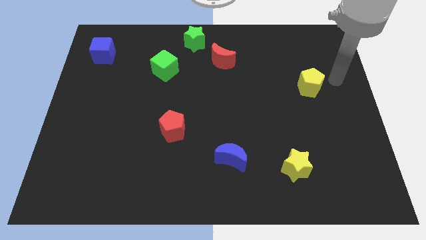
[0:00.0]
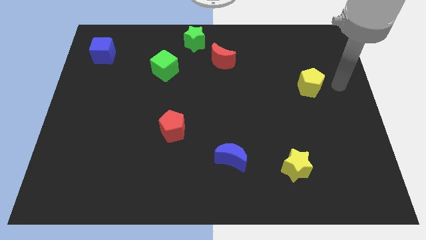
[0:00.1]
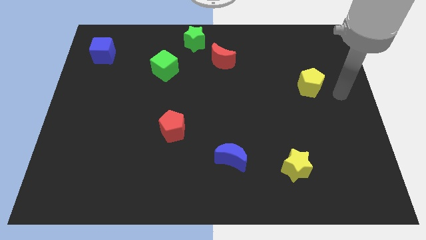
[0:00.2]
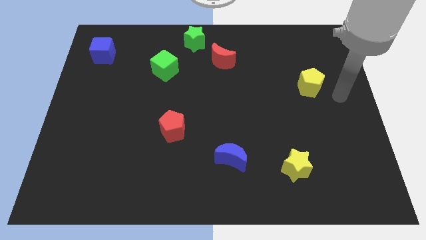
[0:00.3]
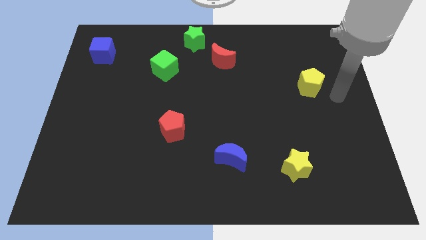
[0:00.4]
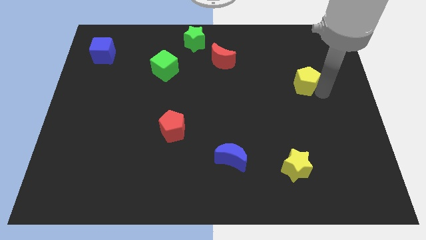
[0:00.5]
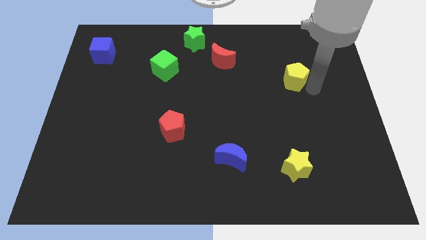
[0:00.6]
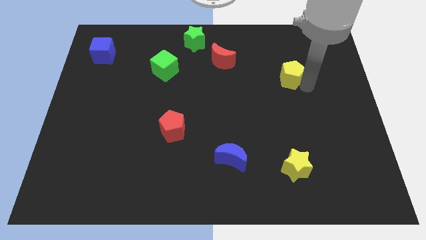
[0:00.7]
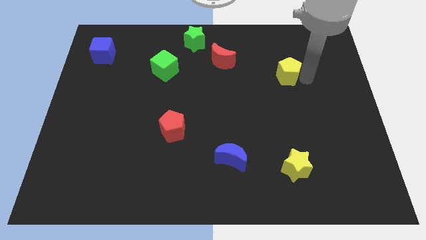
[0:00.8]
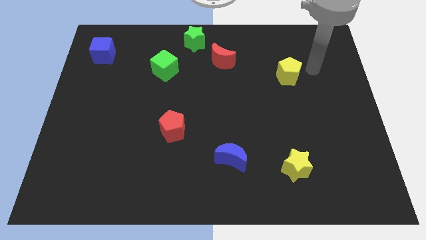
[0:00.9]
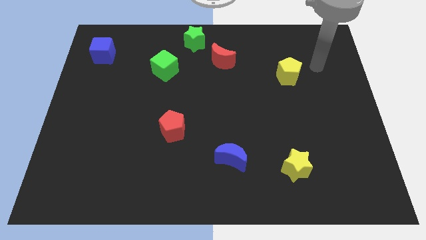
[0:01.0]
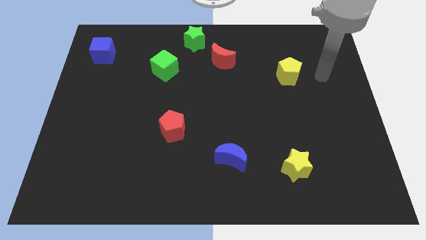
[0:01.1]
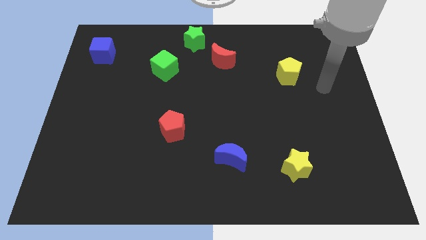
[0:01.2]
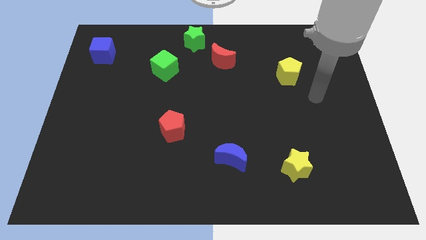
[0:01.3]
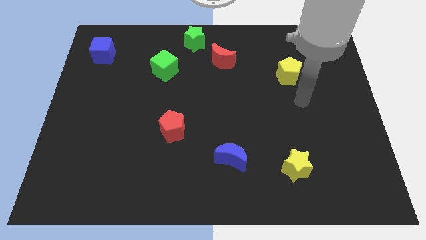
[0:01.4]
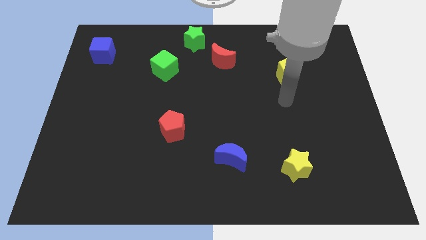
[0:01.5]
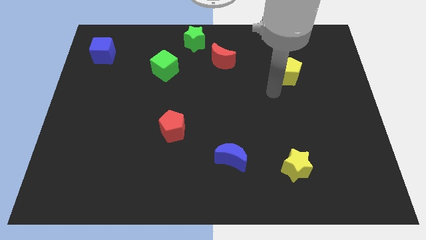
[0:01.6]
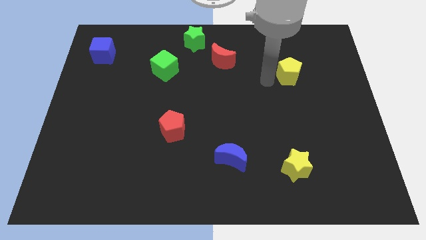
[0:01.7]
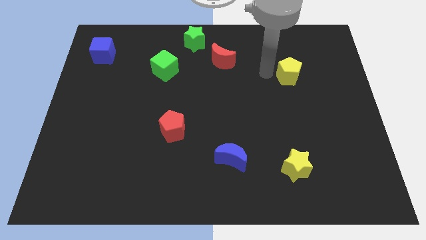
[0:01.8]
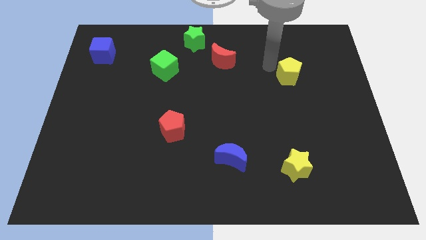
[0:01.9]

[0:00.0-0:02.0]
place the yellow pentagon to the right of green cube

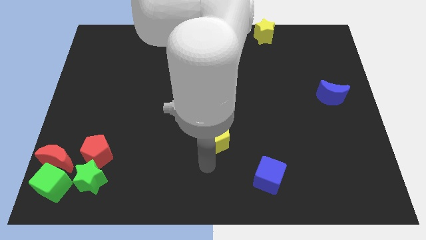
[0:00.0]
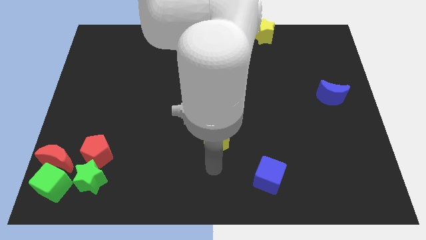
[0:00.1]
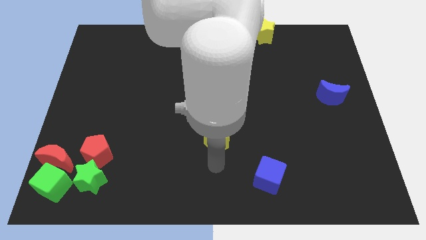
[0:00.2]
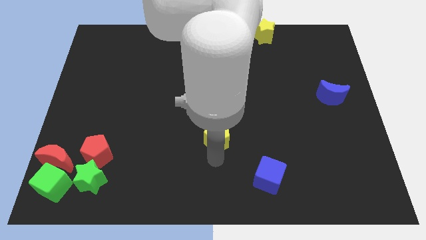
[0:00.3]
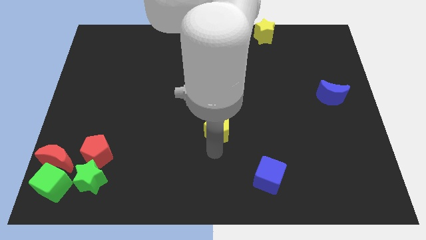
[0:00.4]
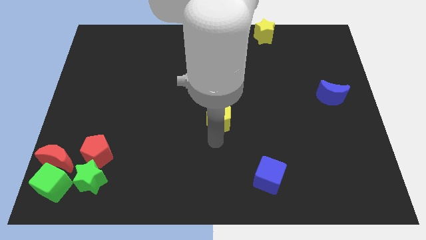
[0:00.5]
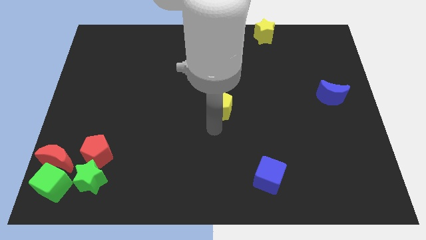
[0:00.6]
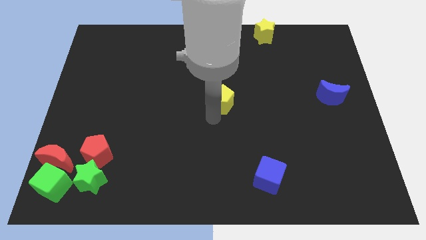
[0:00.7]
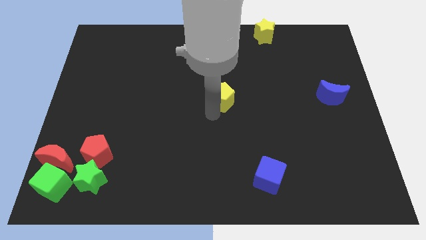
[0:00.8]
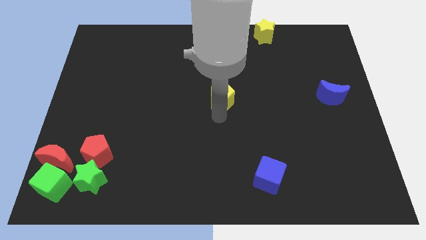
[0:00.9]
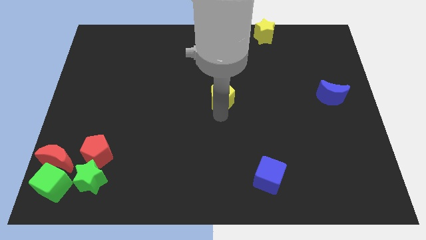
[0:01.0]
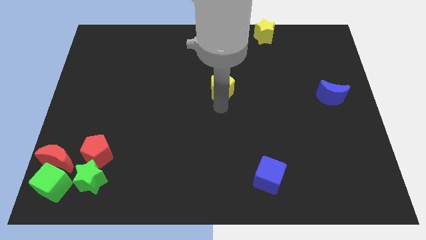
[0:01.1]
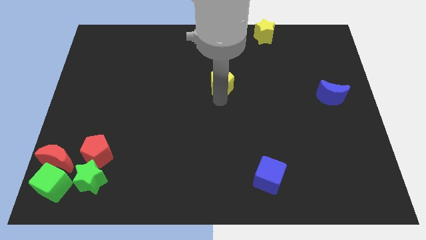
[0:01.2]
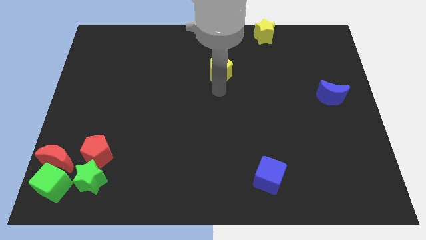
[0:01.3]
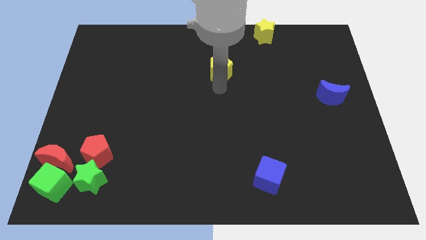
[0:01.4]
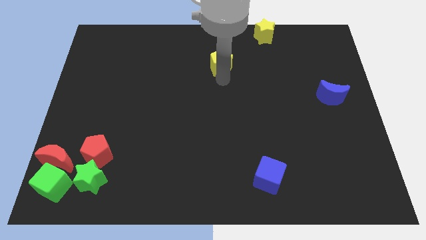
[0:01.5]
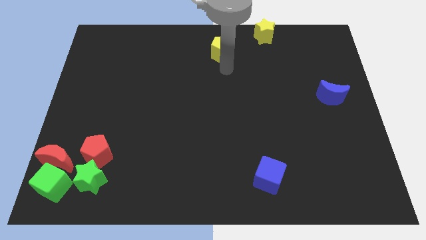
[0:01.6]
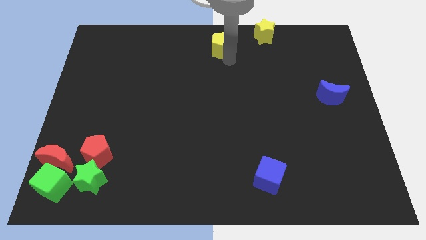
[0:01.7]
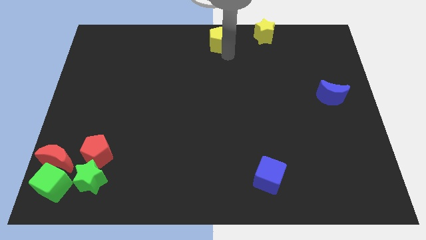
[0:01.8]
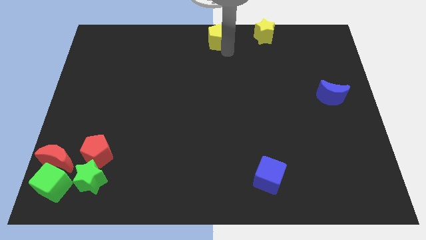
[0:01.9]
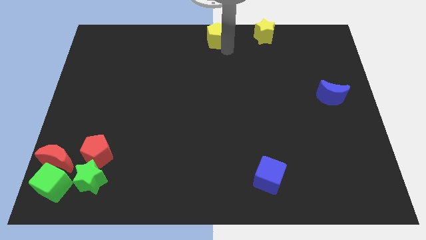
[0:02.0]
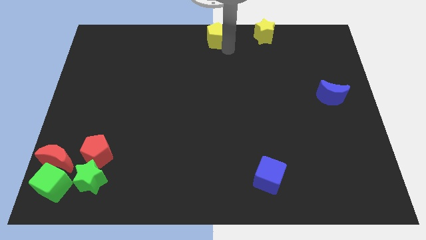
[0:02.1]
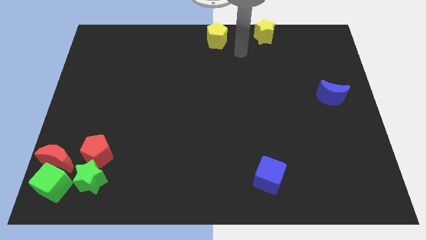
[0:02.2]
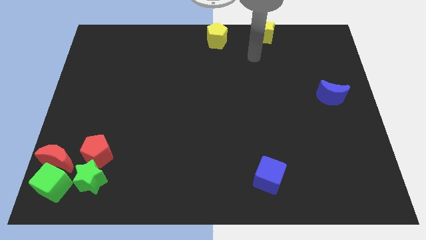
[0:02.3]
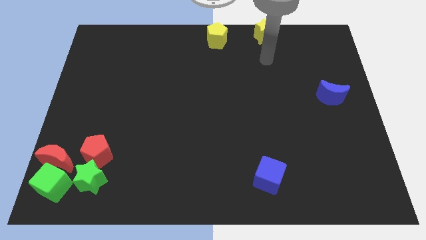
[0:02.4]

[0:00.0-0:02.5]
move the yellow pentagon to the top center

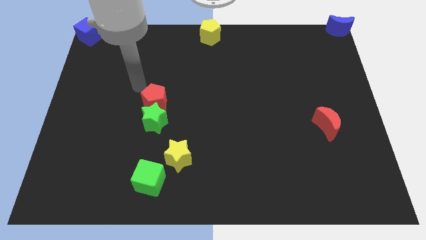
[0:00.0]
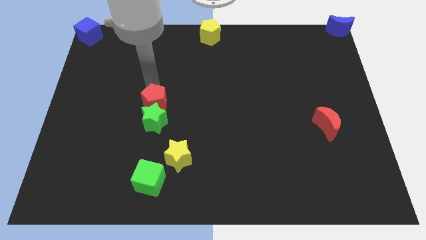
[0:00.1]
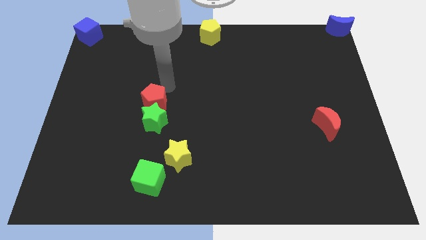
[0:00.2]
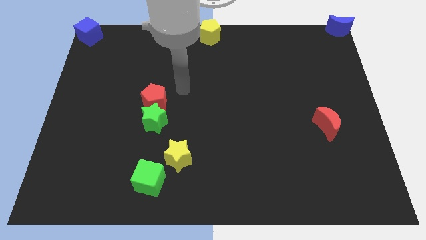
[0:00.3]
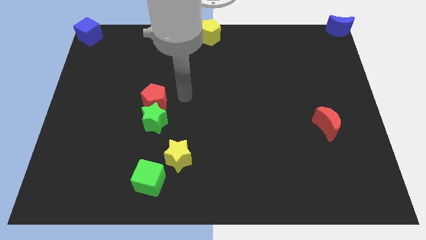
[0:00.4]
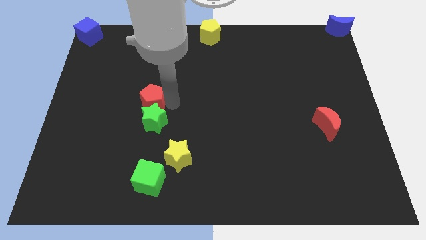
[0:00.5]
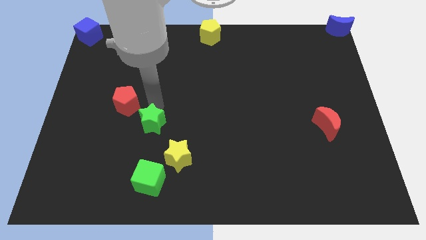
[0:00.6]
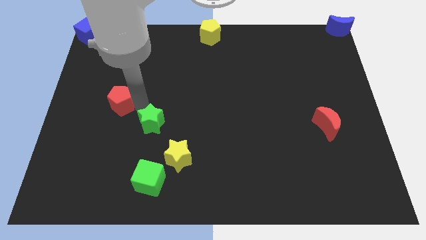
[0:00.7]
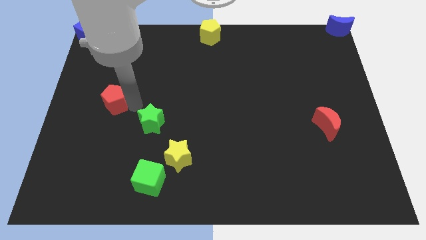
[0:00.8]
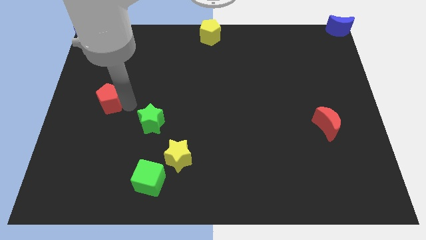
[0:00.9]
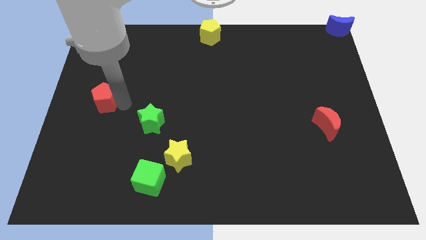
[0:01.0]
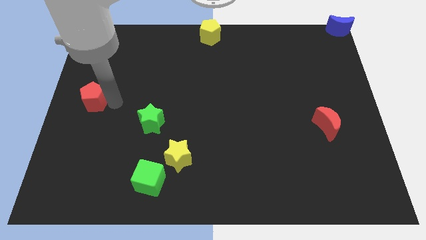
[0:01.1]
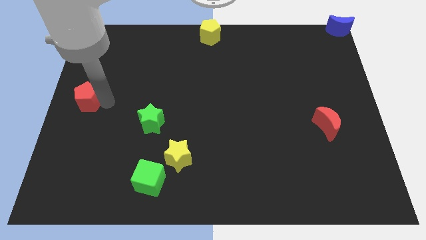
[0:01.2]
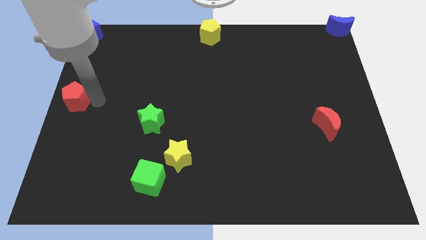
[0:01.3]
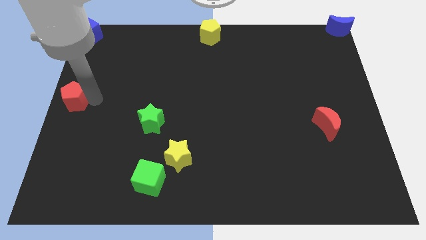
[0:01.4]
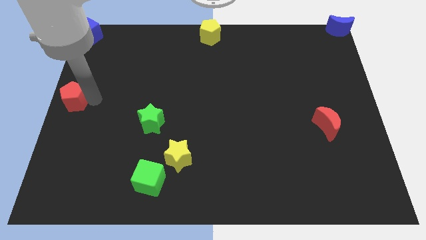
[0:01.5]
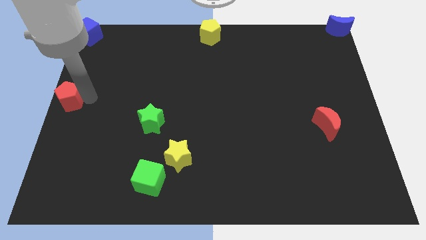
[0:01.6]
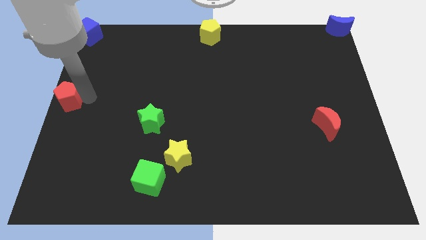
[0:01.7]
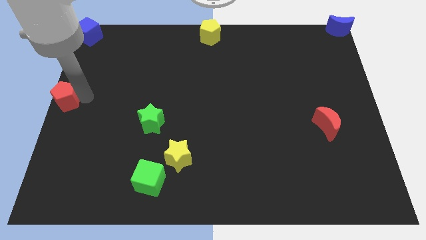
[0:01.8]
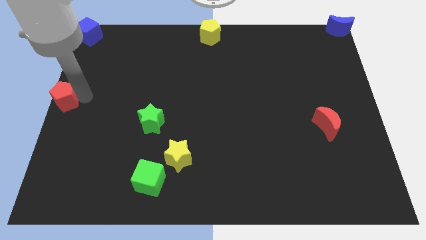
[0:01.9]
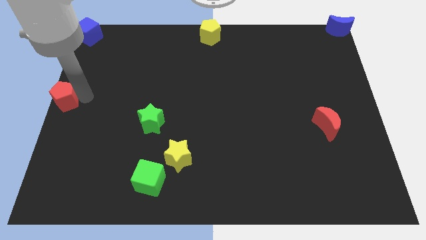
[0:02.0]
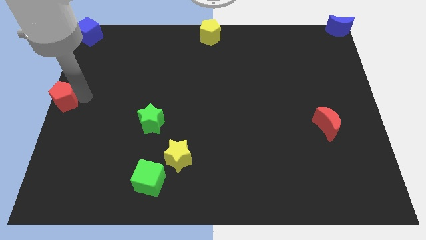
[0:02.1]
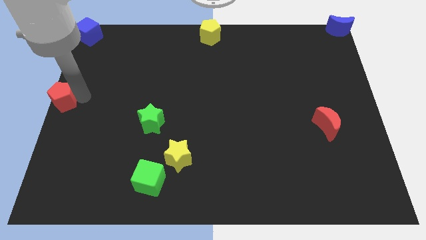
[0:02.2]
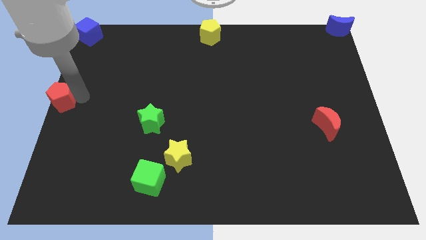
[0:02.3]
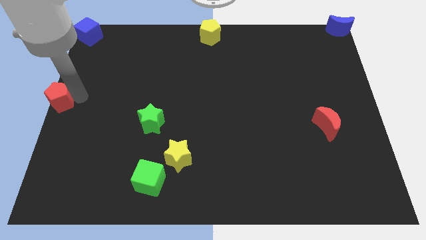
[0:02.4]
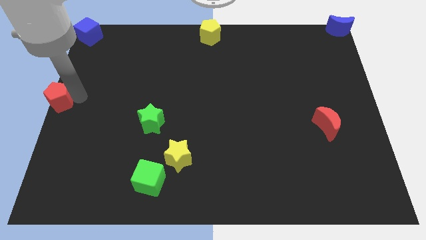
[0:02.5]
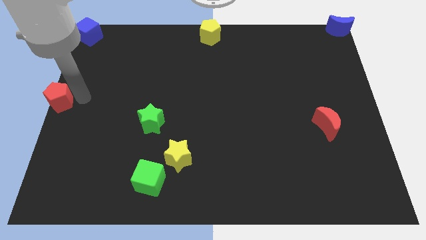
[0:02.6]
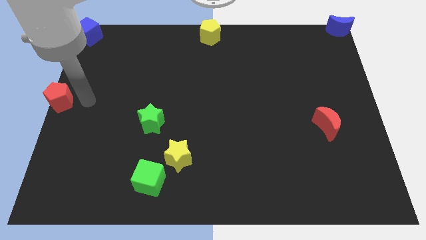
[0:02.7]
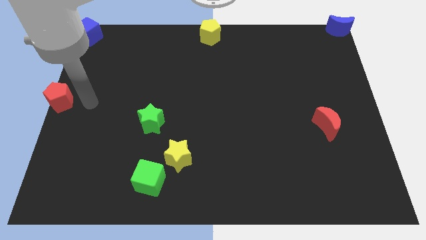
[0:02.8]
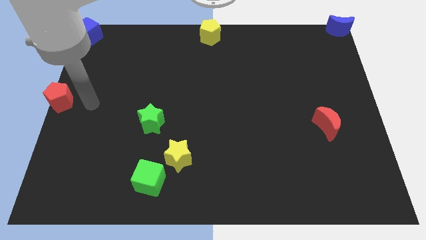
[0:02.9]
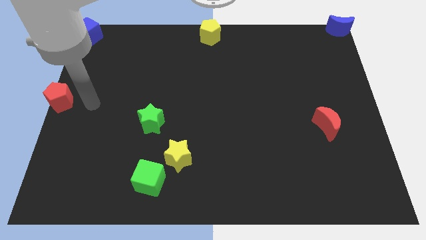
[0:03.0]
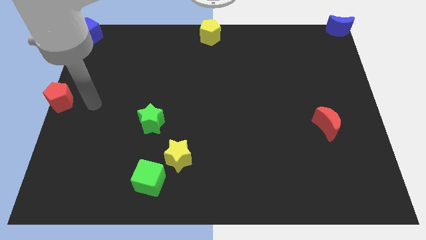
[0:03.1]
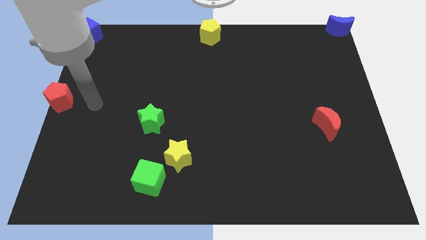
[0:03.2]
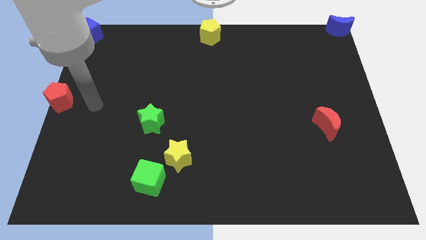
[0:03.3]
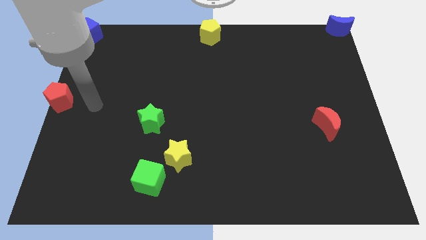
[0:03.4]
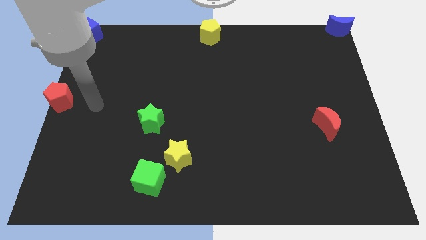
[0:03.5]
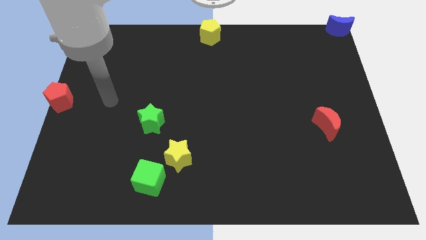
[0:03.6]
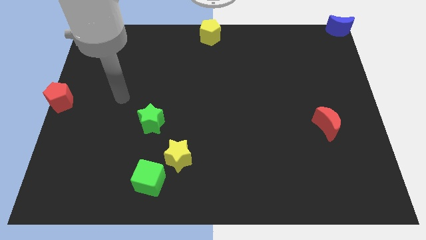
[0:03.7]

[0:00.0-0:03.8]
place the red pentagon at the left center of the board

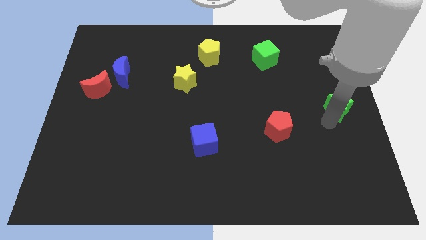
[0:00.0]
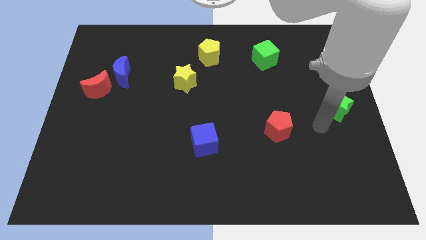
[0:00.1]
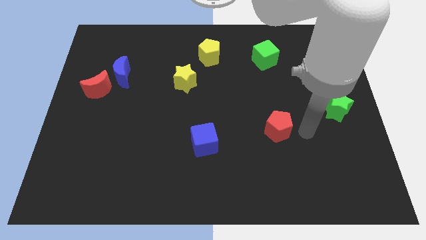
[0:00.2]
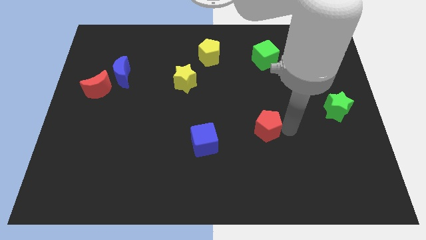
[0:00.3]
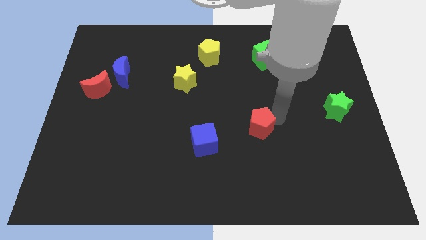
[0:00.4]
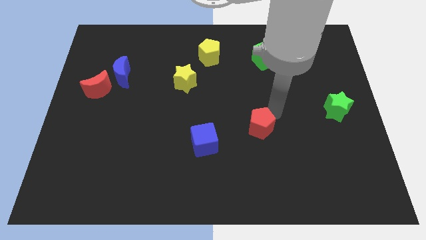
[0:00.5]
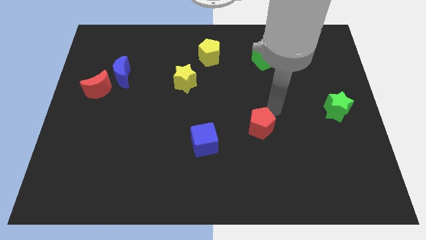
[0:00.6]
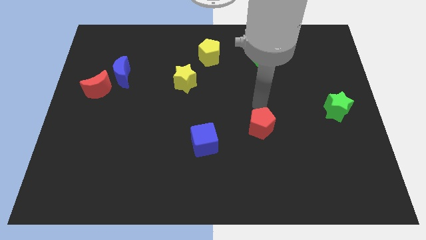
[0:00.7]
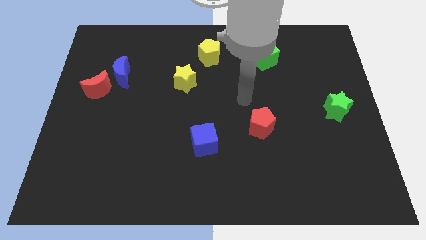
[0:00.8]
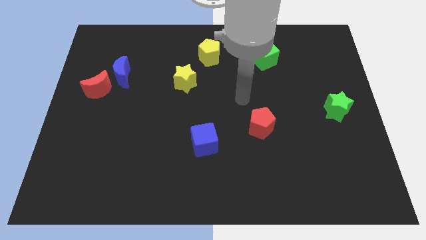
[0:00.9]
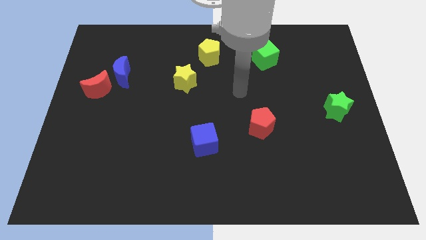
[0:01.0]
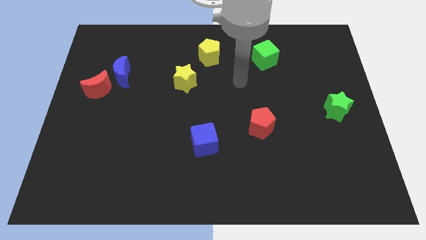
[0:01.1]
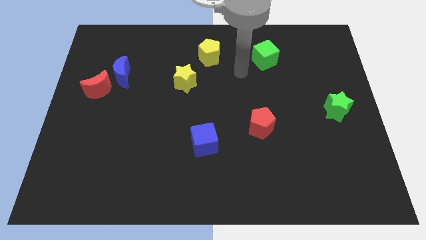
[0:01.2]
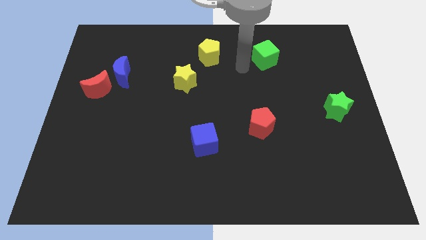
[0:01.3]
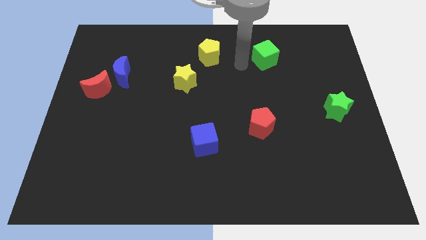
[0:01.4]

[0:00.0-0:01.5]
touch the right side of the red pentagon
